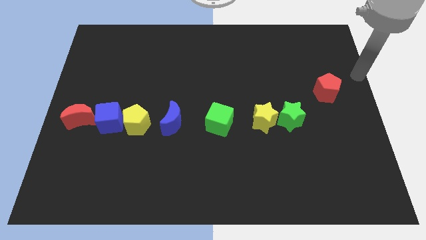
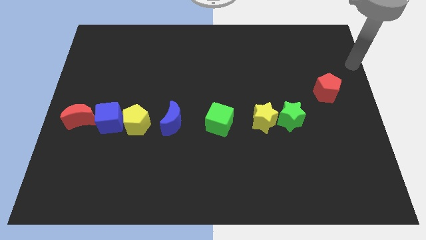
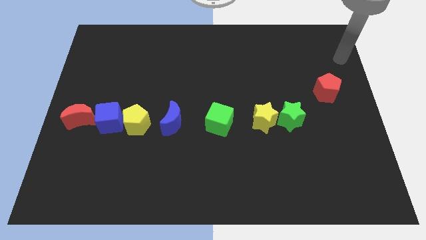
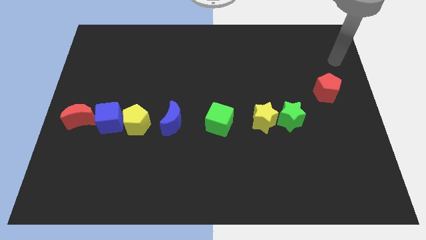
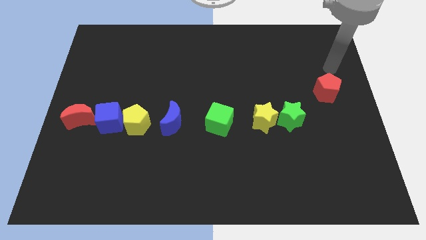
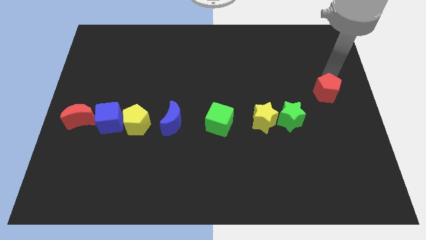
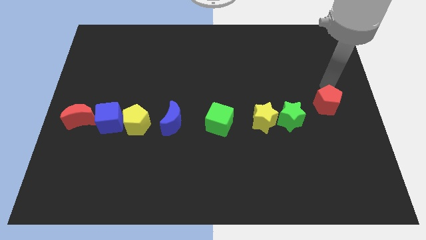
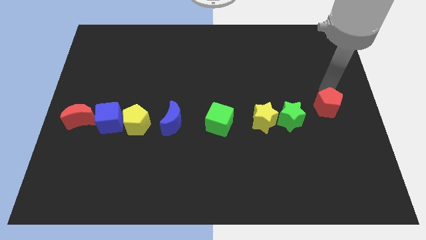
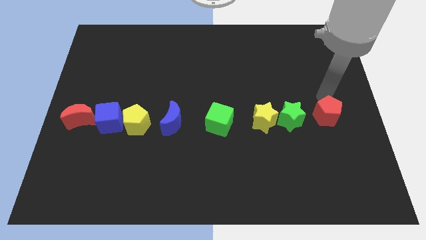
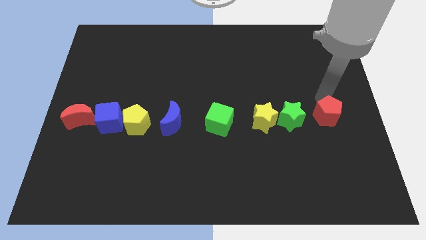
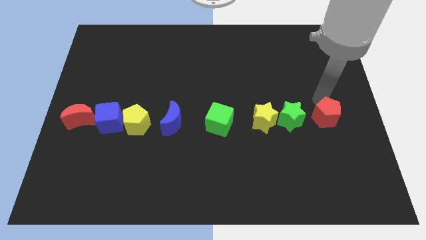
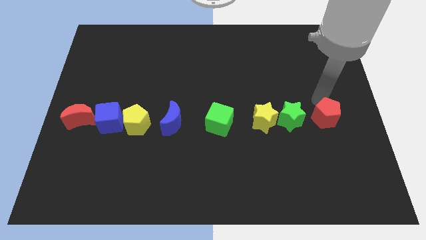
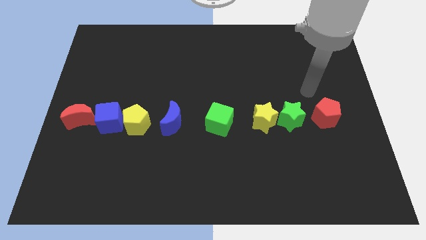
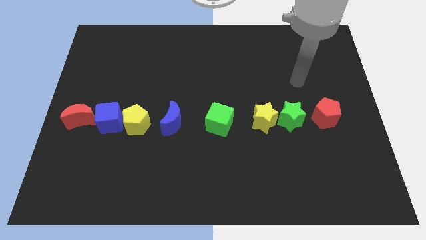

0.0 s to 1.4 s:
place the red pentagon towards the right side of the green star

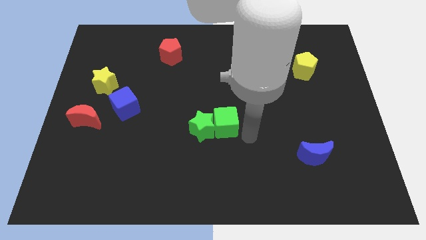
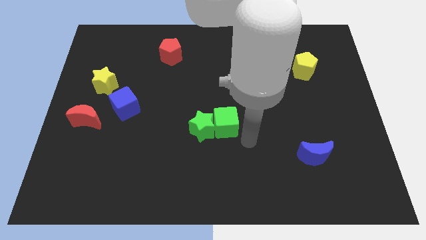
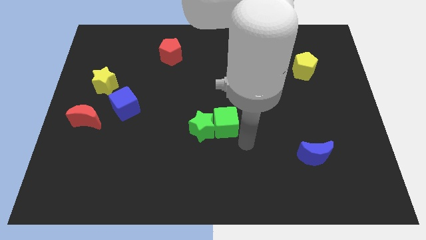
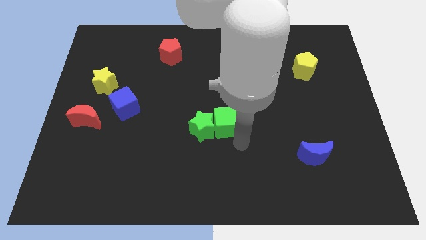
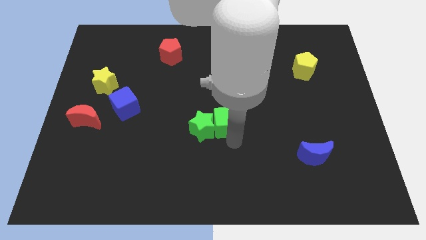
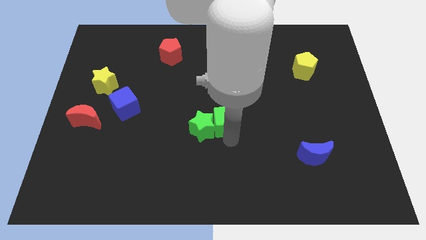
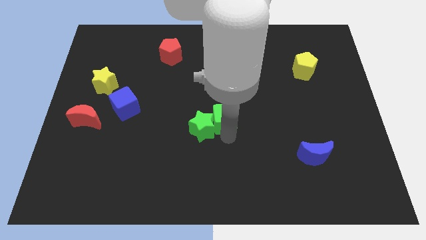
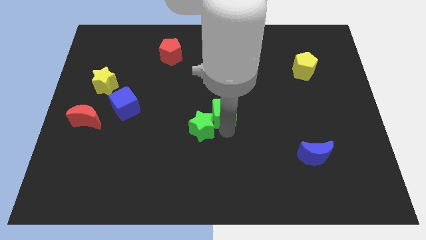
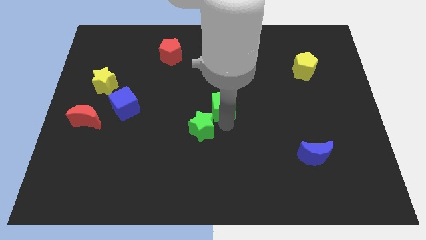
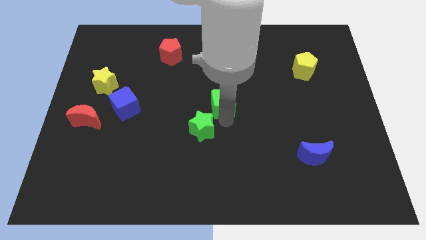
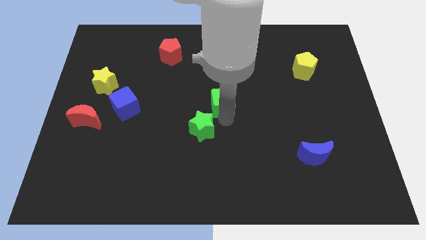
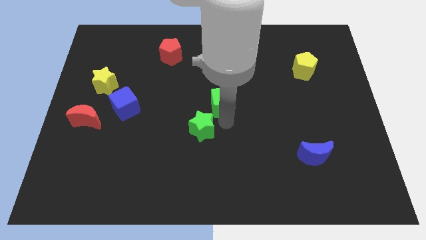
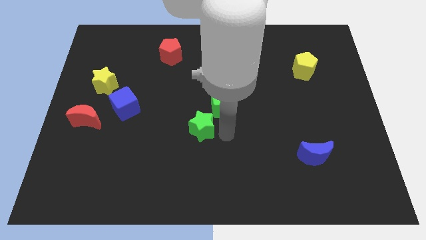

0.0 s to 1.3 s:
move the green cube to the center of the board

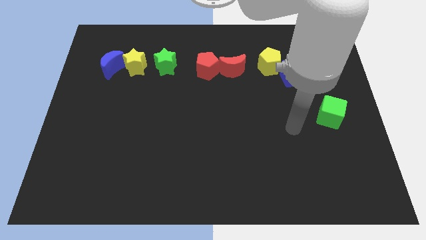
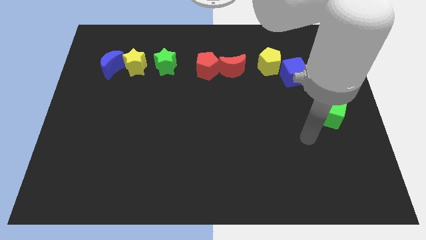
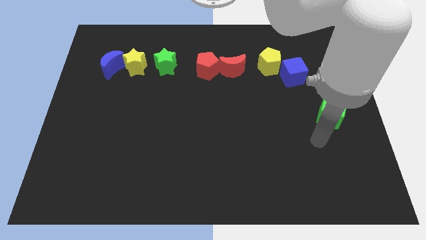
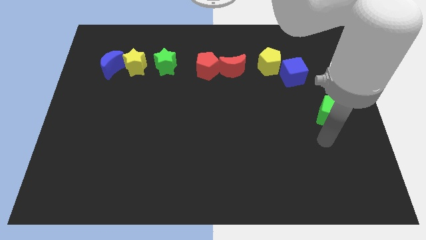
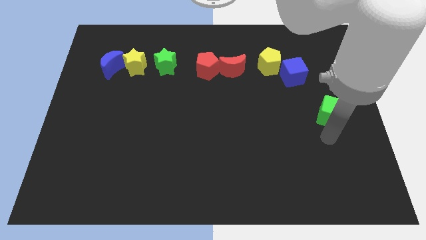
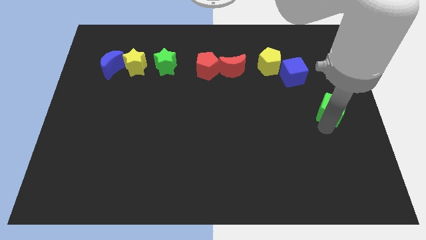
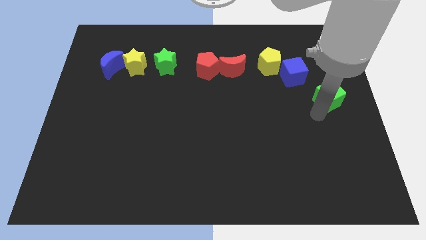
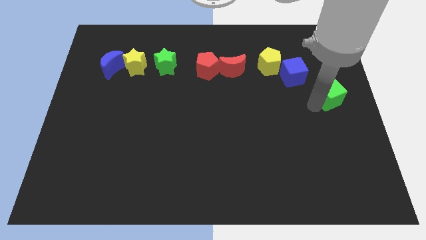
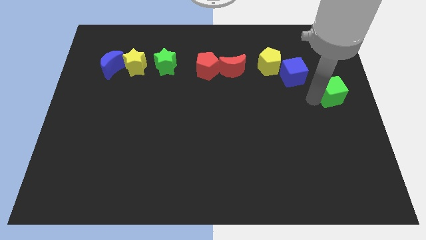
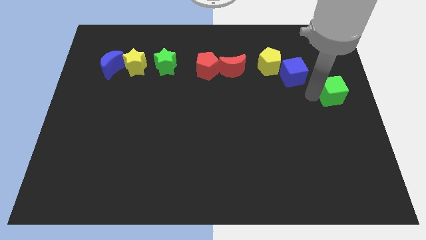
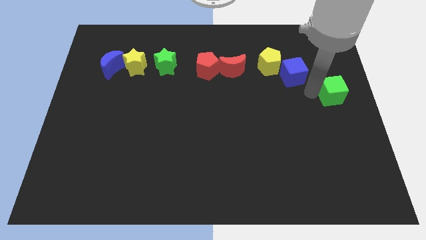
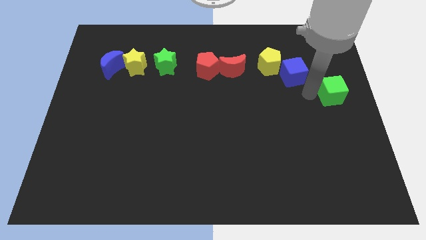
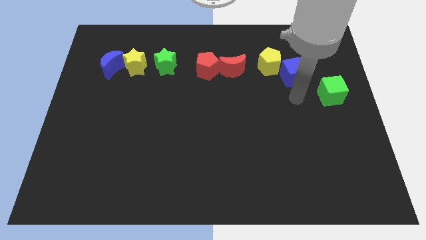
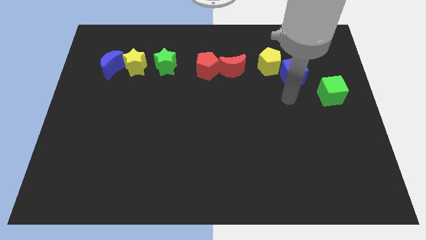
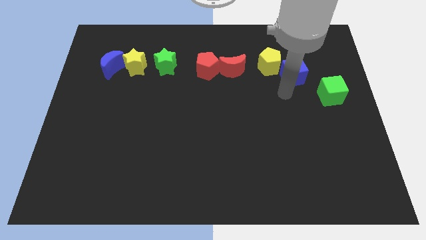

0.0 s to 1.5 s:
slide the green cube slightly towards up

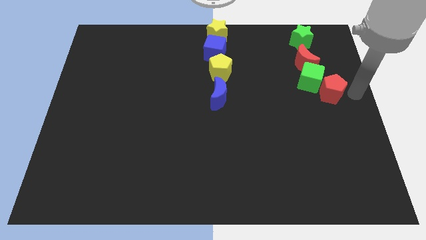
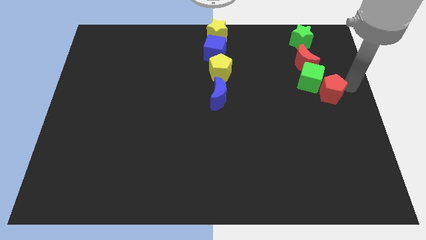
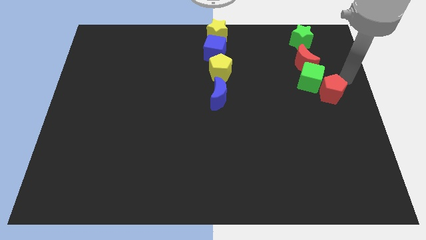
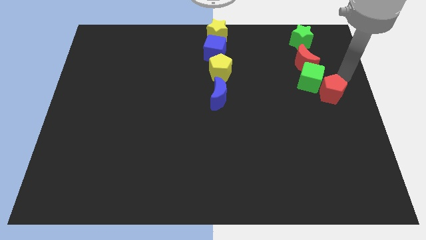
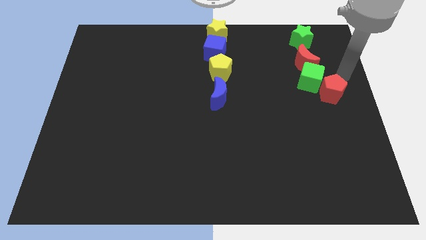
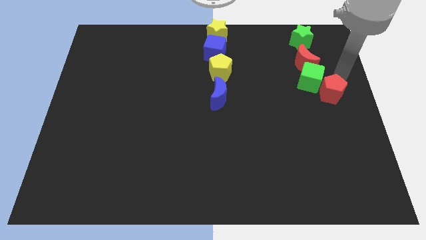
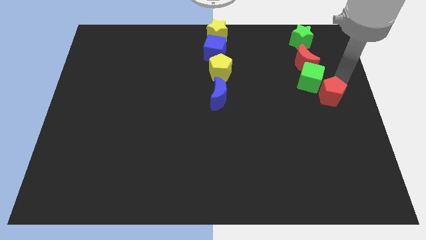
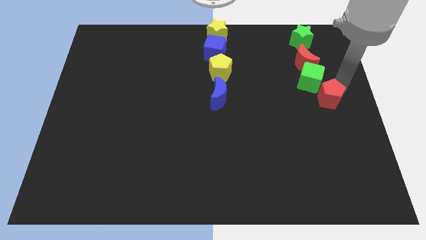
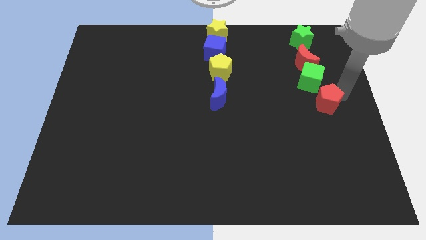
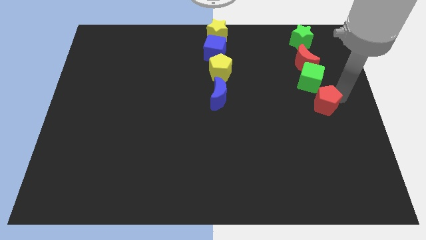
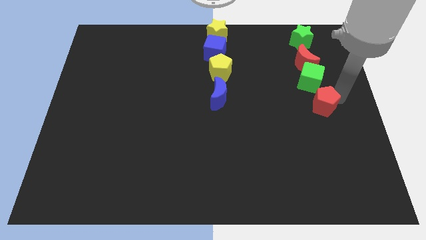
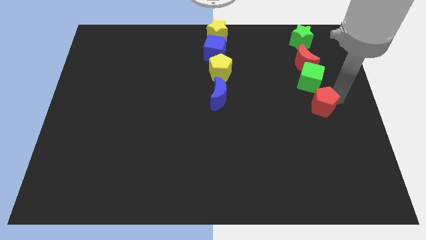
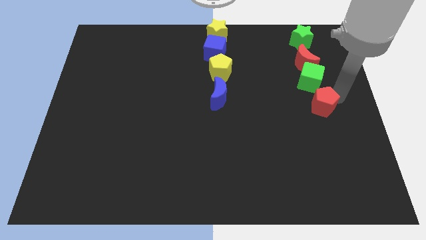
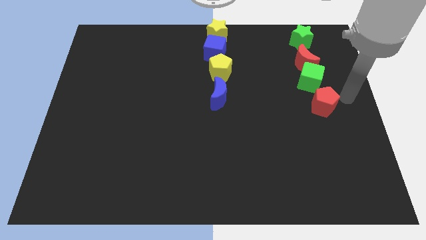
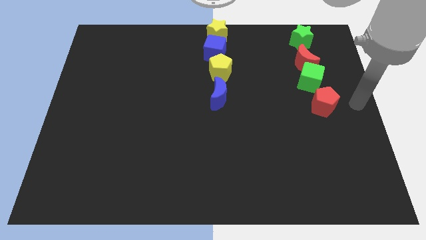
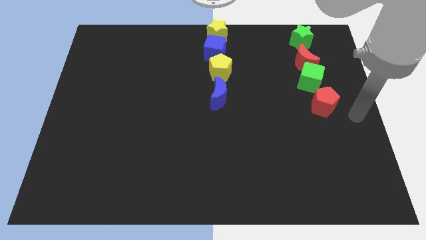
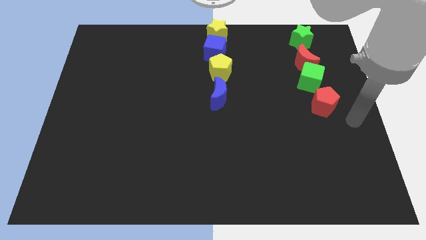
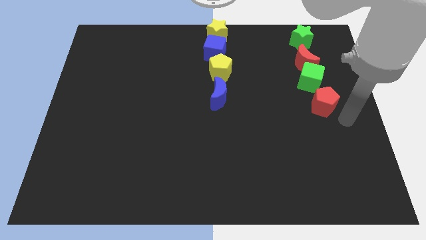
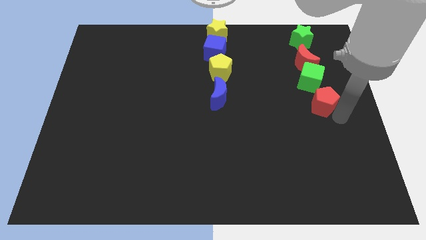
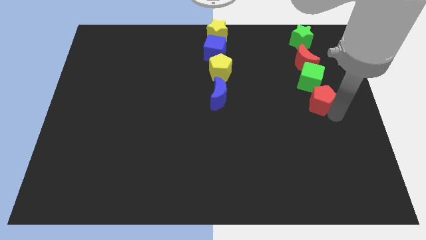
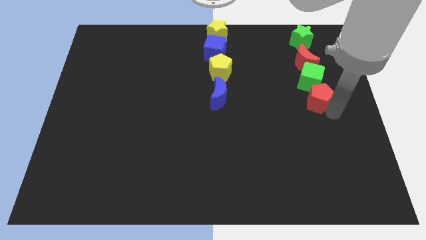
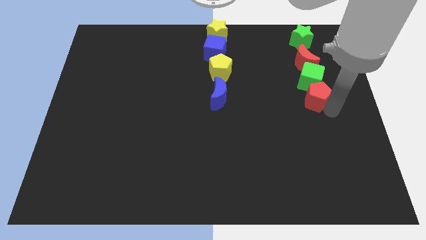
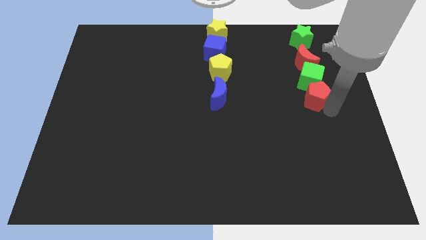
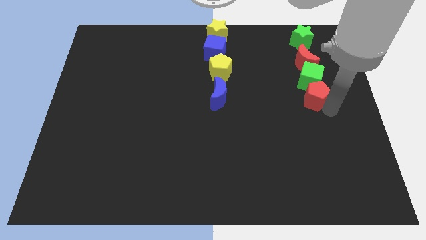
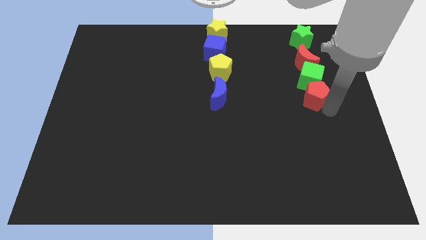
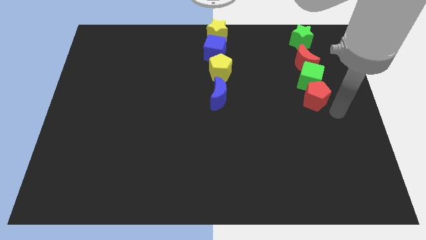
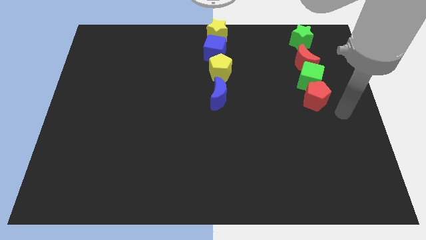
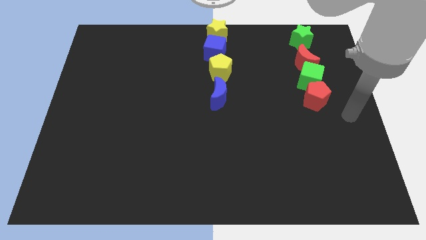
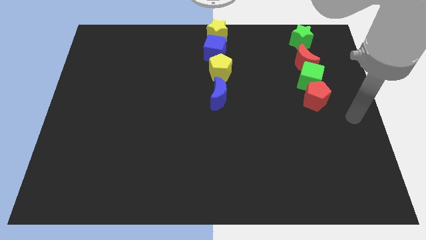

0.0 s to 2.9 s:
push the red pentagon into the green cube

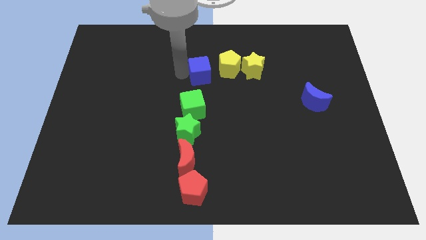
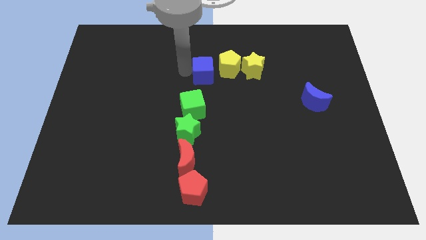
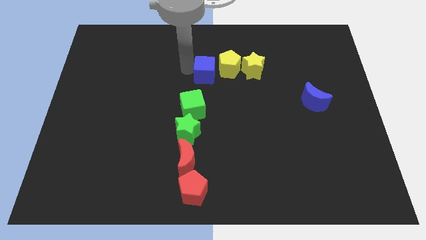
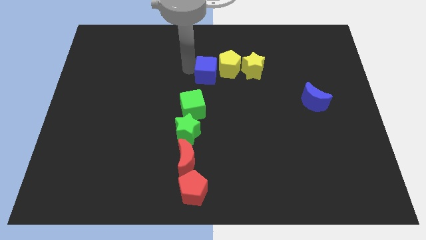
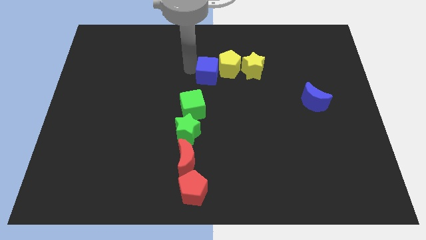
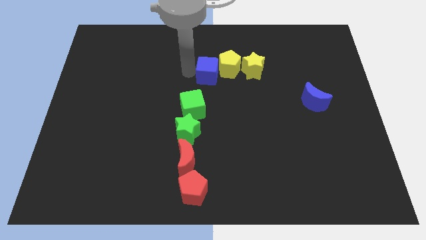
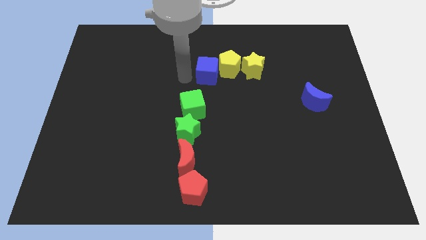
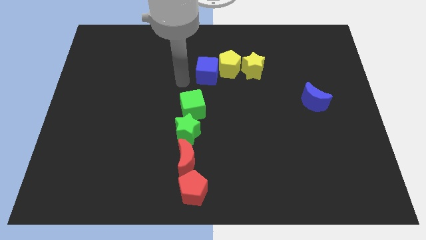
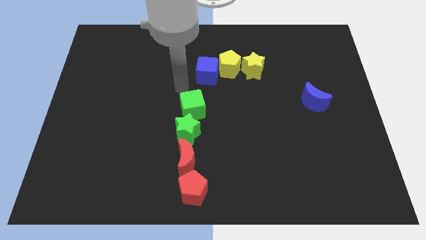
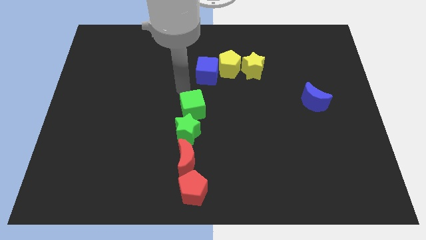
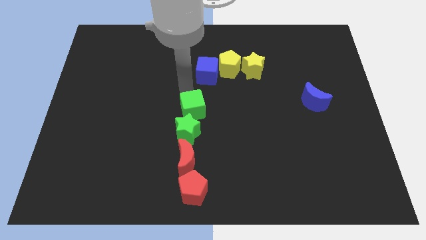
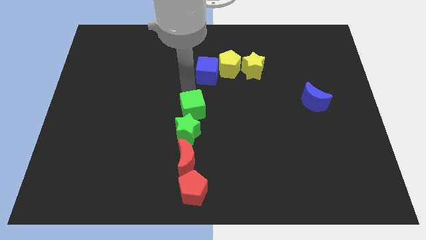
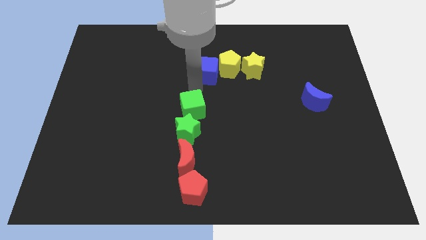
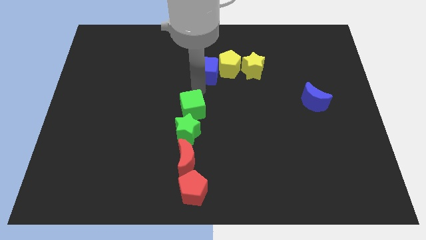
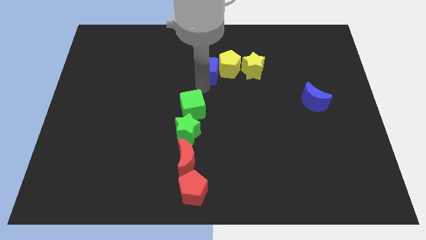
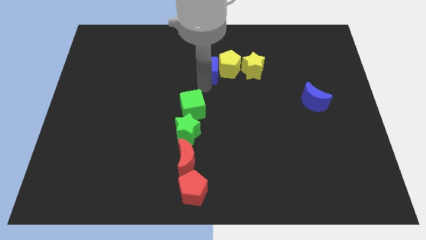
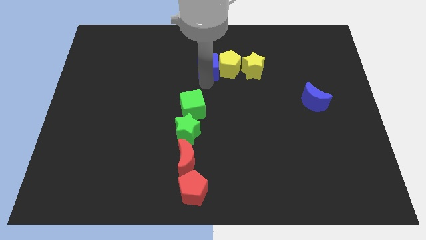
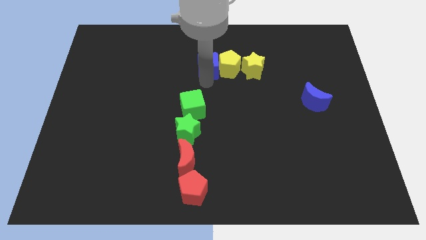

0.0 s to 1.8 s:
move the blue cube to the left of the yellow pentagon
